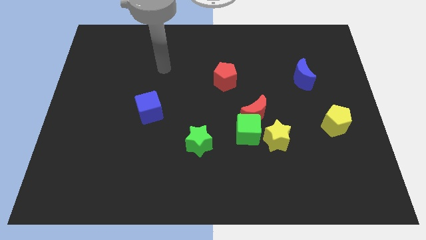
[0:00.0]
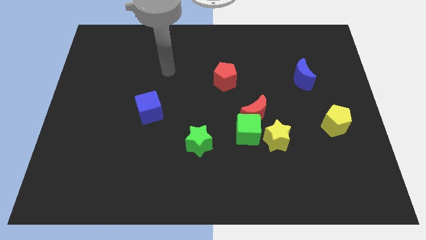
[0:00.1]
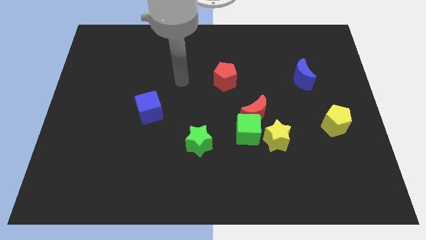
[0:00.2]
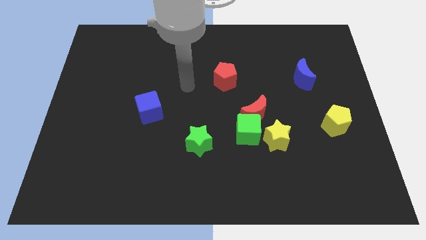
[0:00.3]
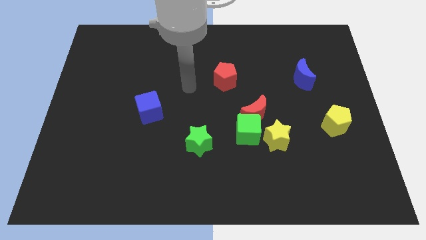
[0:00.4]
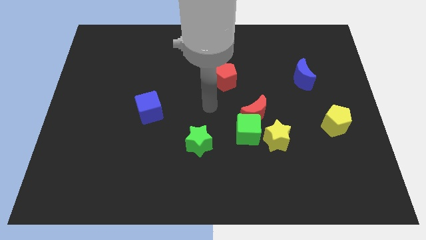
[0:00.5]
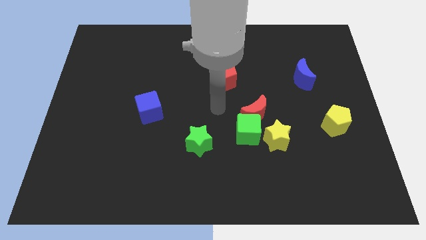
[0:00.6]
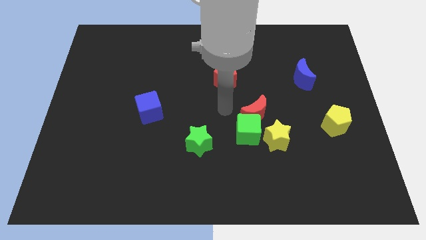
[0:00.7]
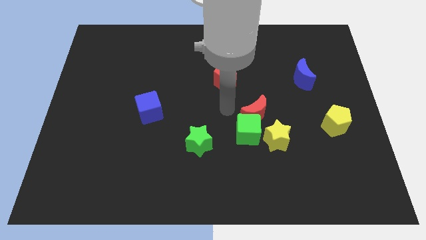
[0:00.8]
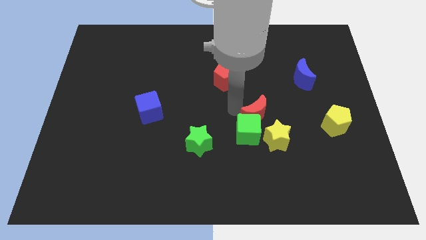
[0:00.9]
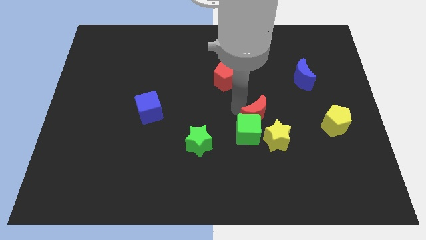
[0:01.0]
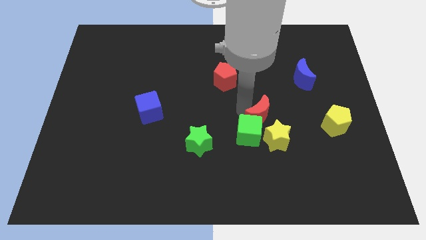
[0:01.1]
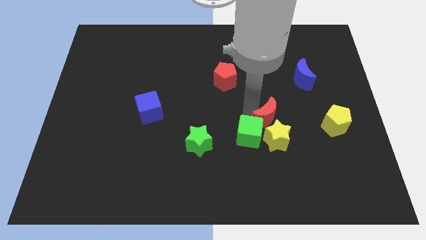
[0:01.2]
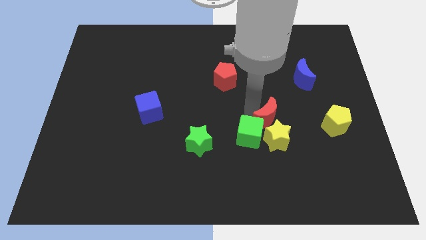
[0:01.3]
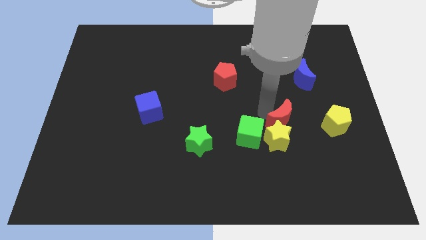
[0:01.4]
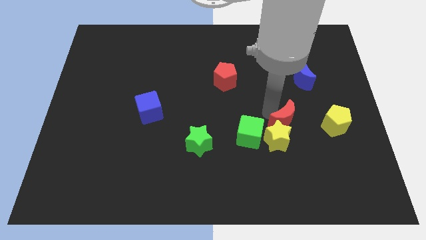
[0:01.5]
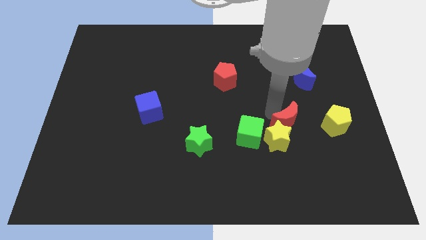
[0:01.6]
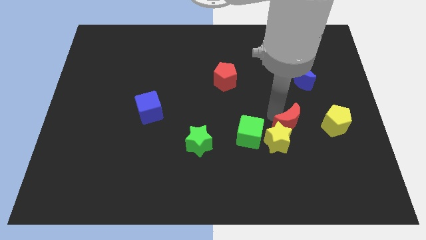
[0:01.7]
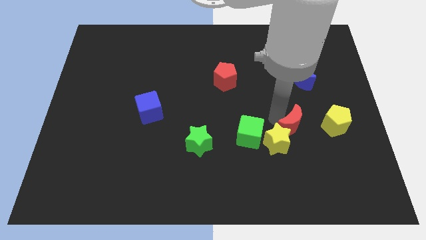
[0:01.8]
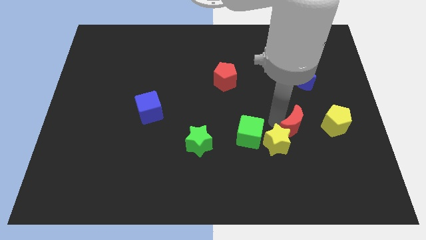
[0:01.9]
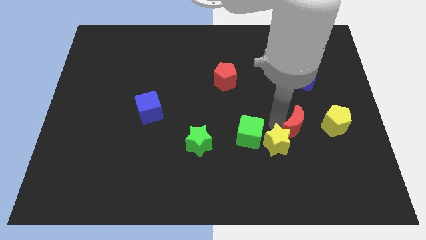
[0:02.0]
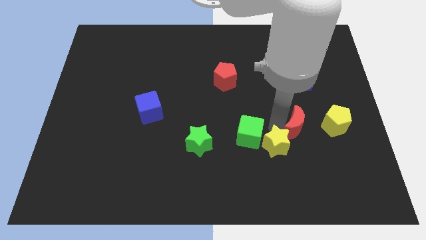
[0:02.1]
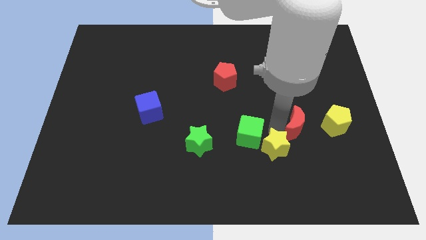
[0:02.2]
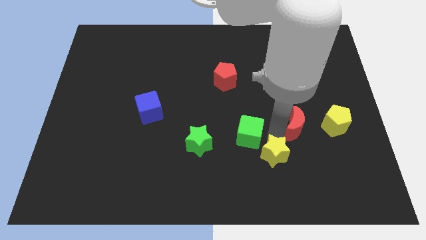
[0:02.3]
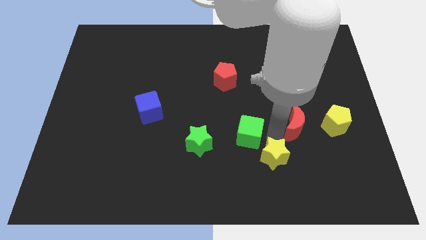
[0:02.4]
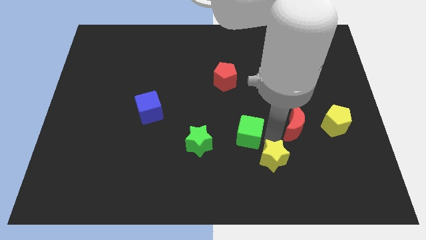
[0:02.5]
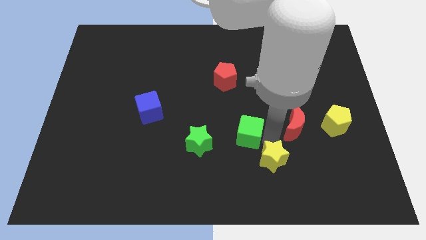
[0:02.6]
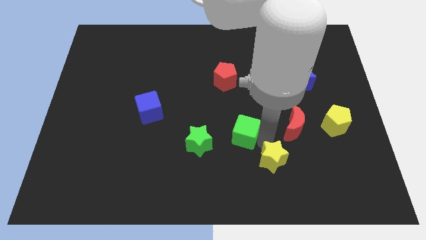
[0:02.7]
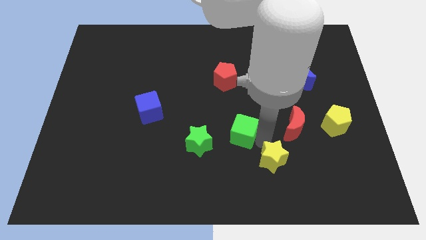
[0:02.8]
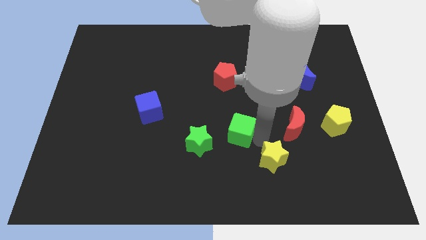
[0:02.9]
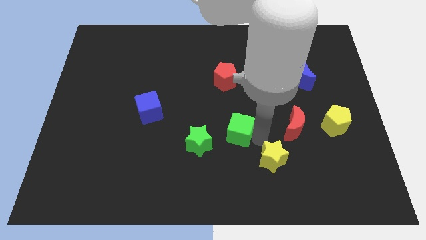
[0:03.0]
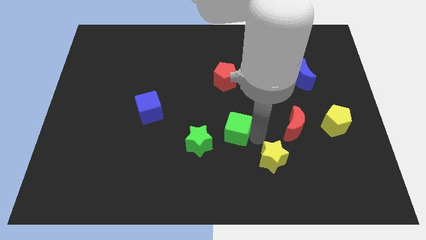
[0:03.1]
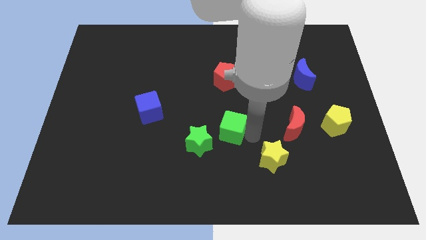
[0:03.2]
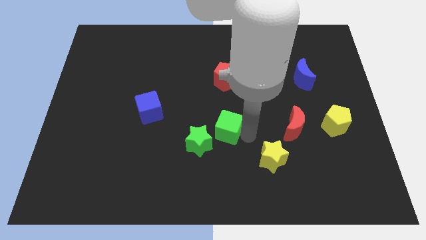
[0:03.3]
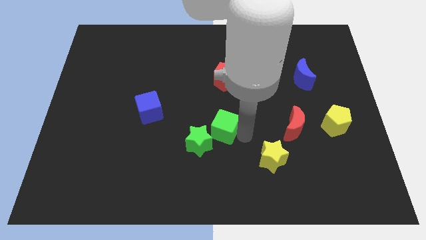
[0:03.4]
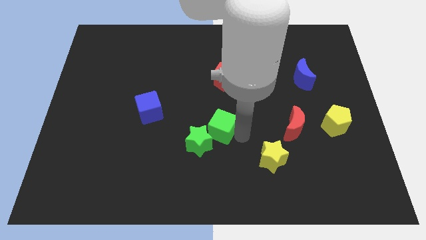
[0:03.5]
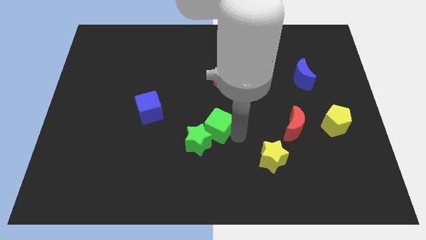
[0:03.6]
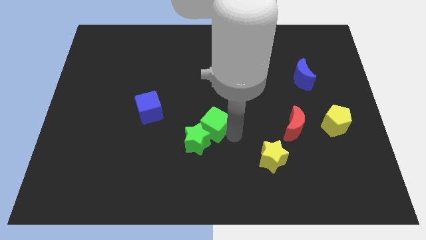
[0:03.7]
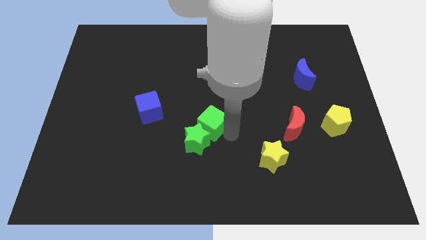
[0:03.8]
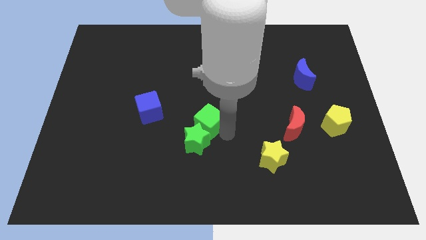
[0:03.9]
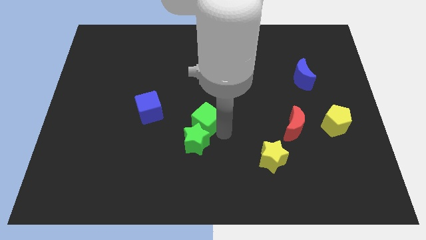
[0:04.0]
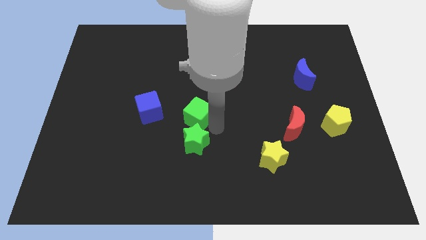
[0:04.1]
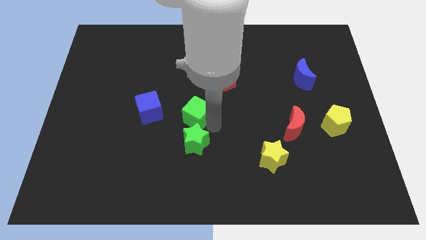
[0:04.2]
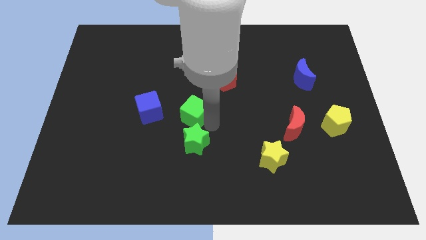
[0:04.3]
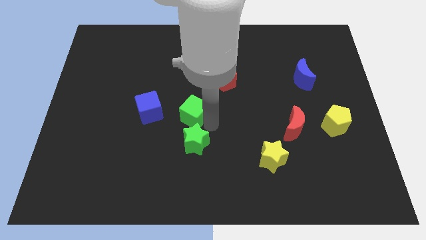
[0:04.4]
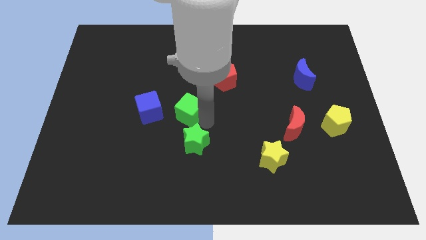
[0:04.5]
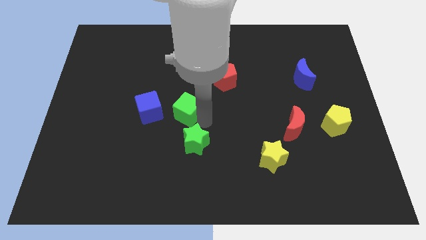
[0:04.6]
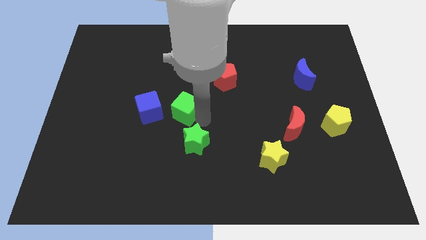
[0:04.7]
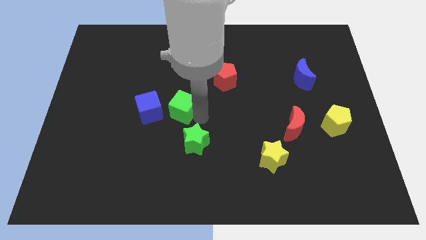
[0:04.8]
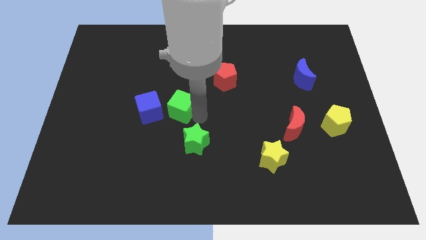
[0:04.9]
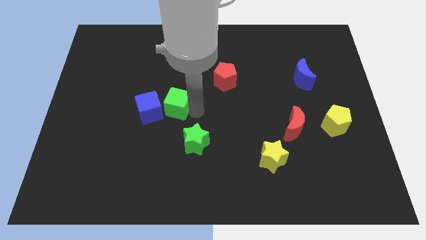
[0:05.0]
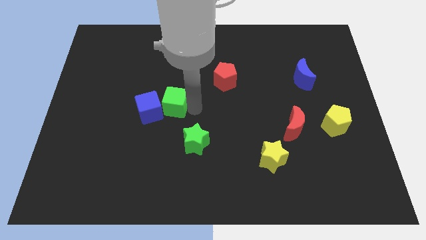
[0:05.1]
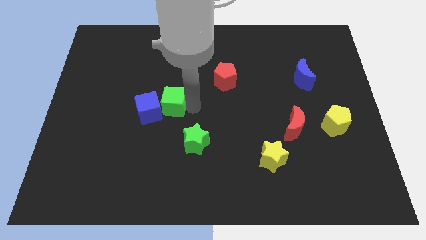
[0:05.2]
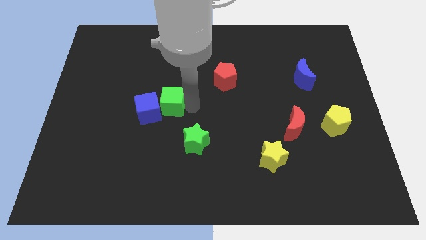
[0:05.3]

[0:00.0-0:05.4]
put the green cube towards the blue cube

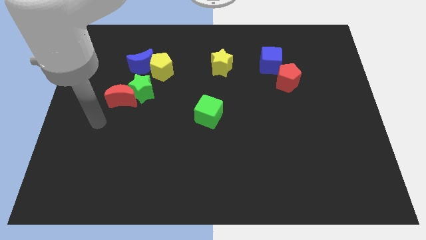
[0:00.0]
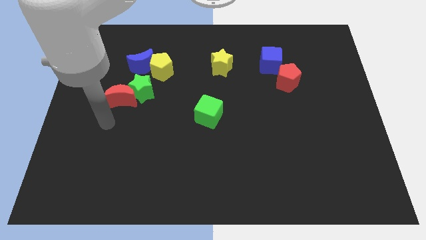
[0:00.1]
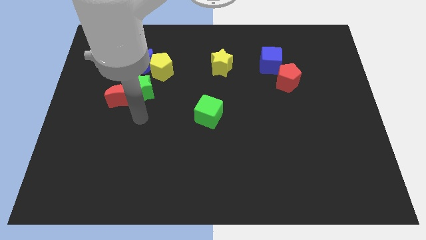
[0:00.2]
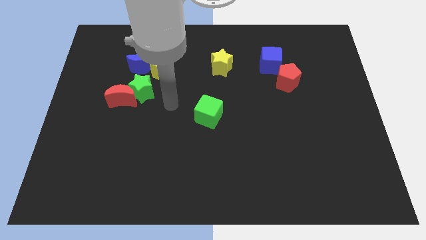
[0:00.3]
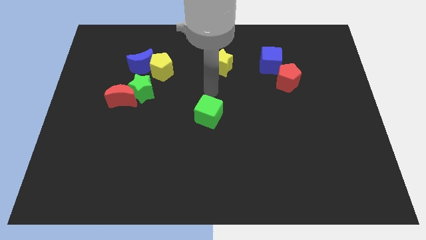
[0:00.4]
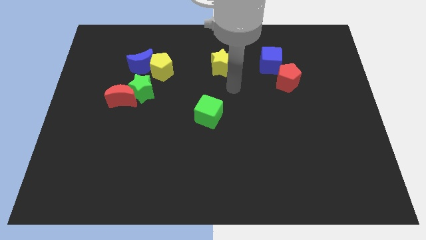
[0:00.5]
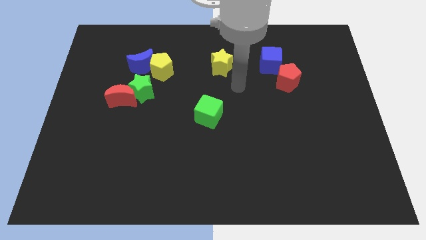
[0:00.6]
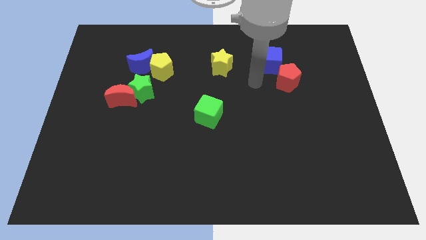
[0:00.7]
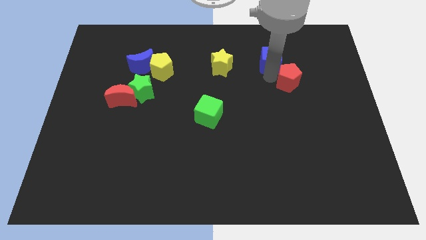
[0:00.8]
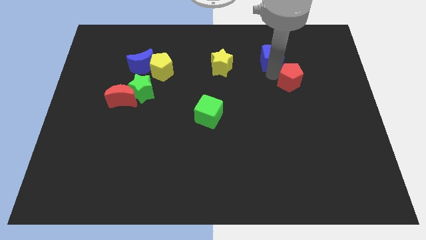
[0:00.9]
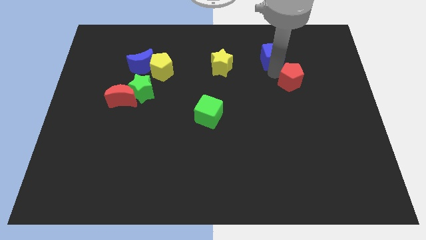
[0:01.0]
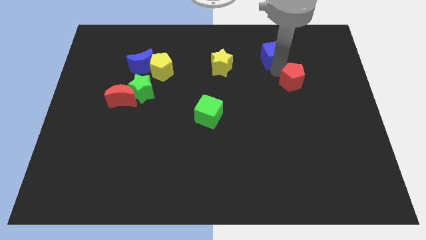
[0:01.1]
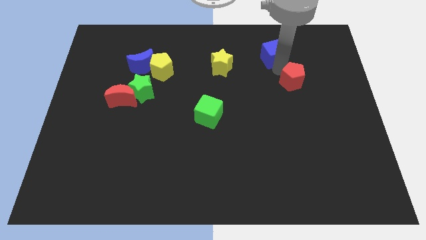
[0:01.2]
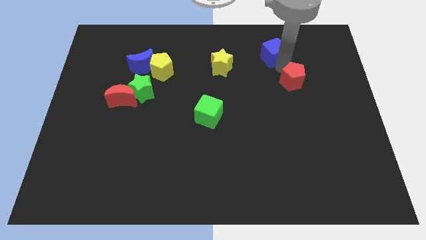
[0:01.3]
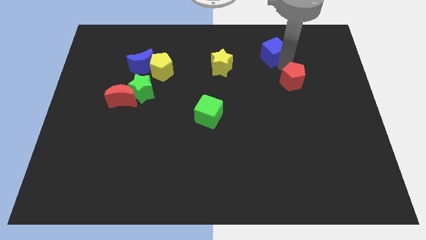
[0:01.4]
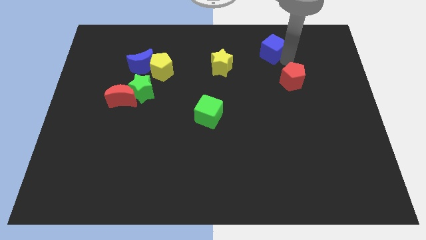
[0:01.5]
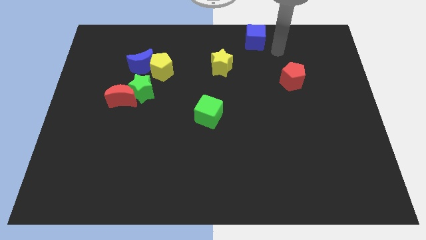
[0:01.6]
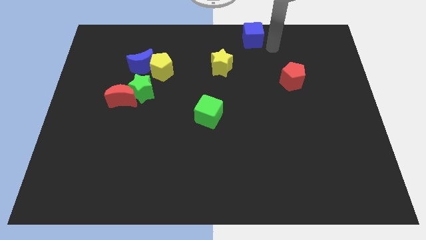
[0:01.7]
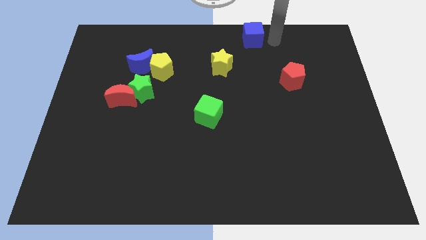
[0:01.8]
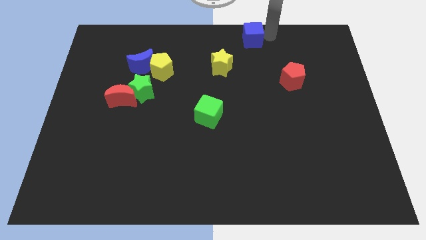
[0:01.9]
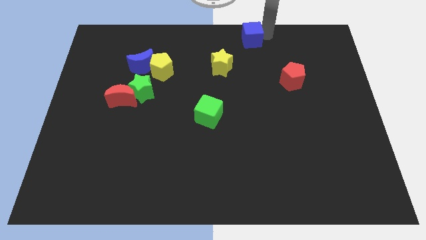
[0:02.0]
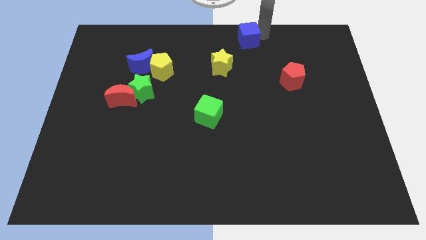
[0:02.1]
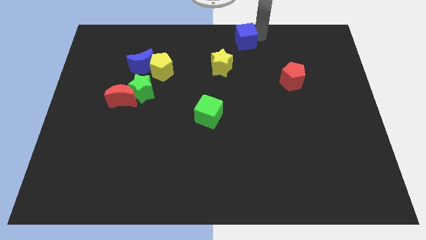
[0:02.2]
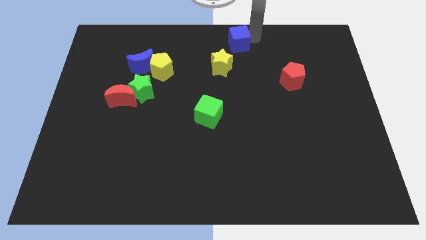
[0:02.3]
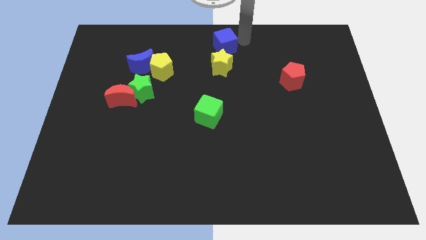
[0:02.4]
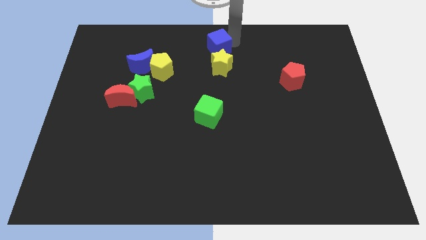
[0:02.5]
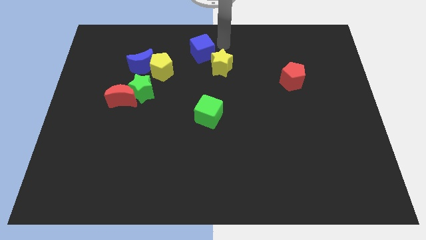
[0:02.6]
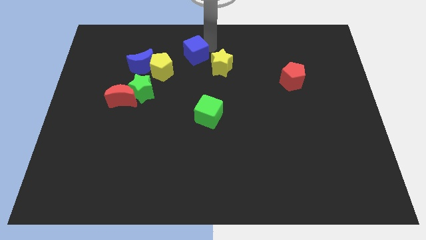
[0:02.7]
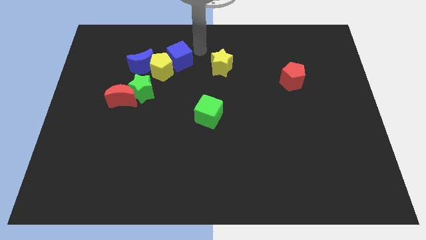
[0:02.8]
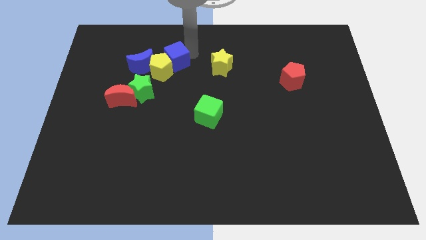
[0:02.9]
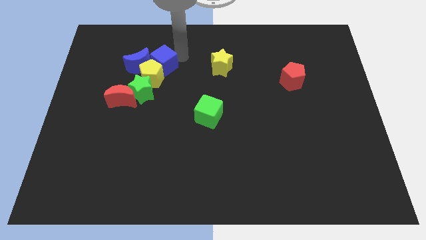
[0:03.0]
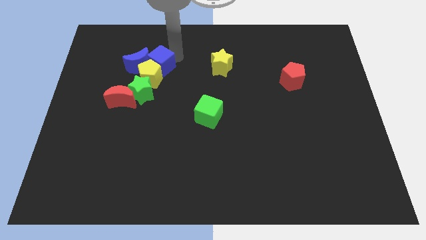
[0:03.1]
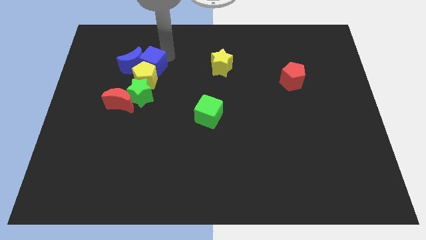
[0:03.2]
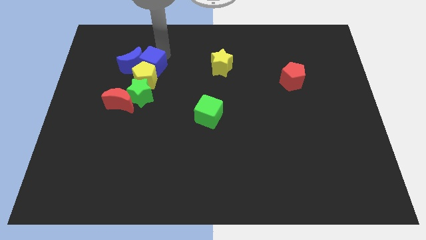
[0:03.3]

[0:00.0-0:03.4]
slide the blue cube to the blue moon
